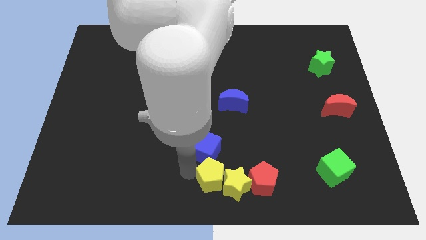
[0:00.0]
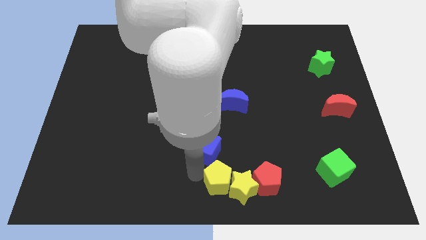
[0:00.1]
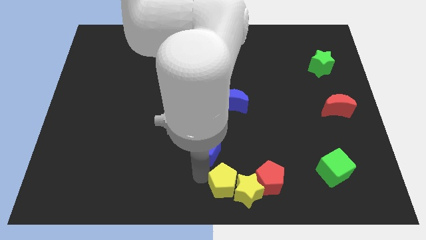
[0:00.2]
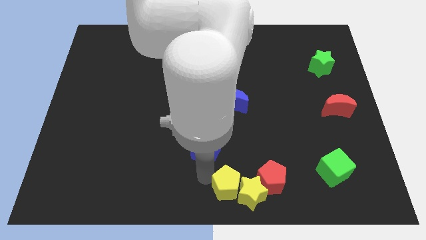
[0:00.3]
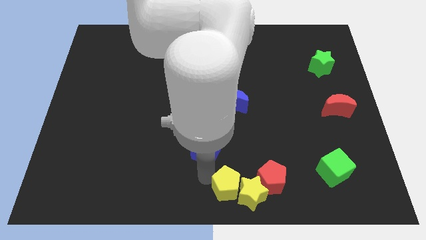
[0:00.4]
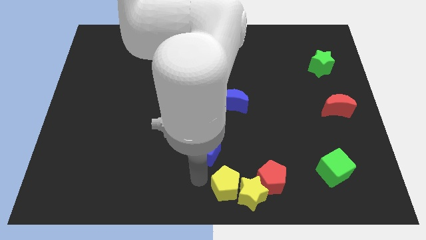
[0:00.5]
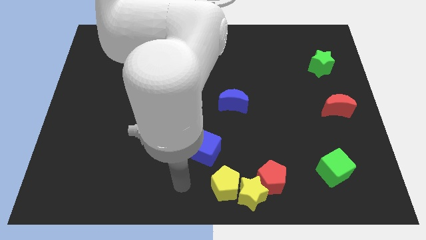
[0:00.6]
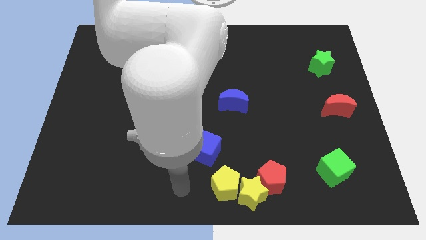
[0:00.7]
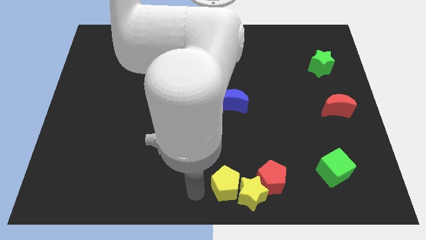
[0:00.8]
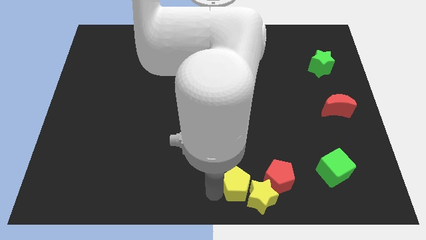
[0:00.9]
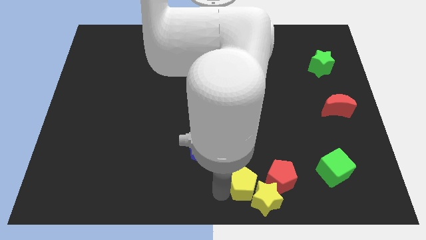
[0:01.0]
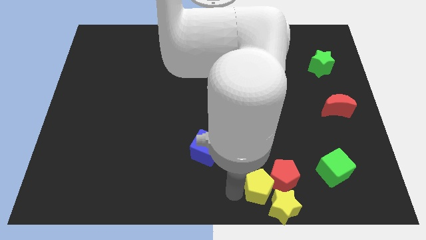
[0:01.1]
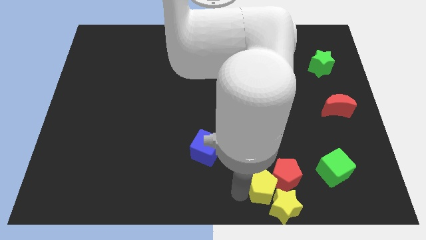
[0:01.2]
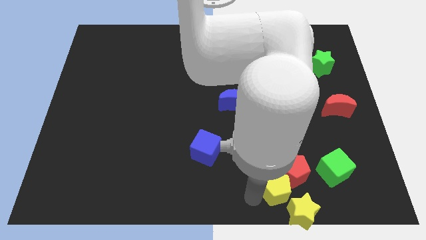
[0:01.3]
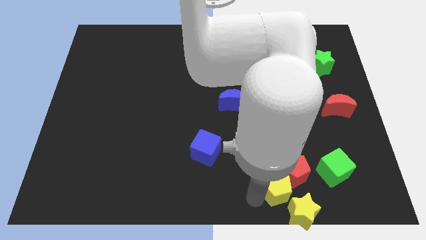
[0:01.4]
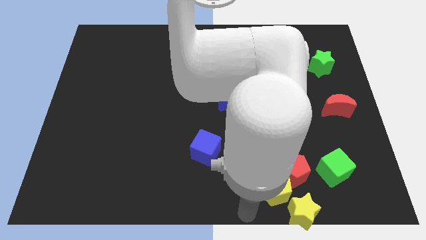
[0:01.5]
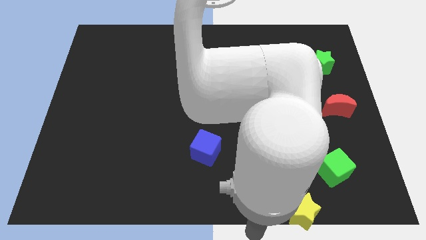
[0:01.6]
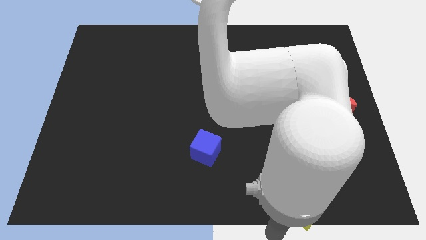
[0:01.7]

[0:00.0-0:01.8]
move the yellow pentagon left to the red pentagon

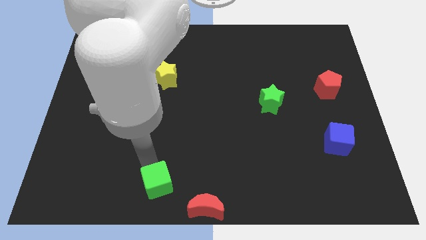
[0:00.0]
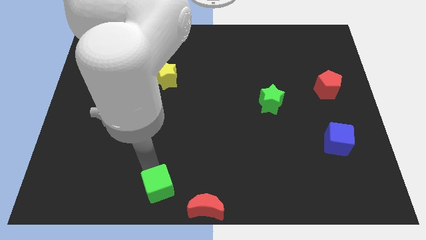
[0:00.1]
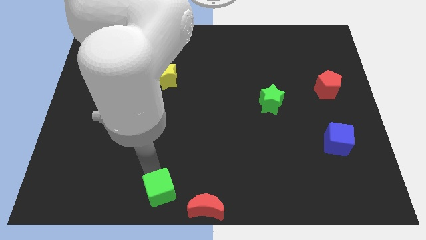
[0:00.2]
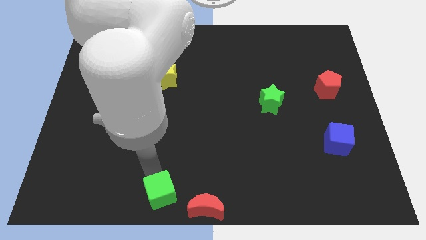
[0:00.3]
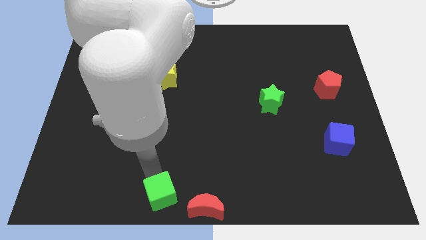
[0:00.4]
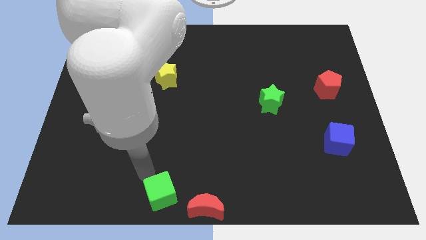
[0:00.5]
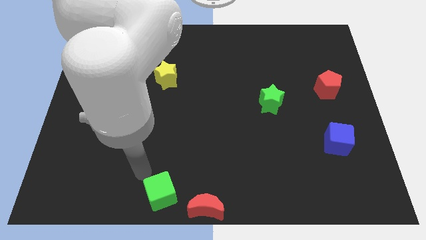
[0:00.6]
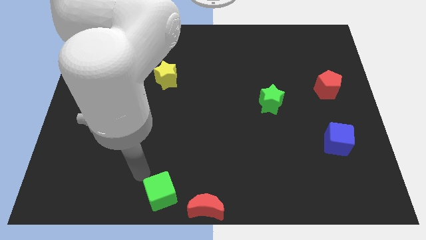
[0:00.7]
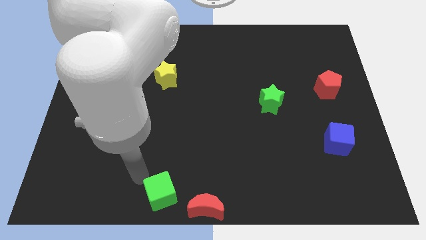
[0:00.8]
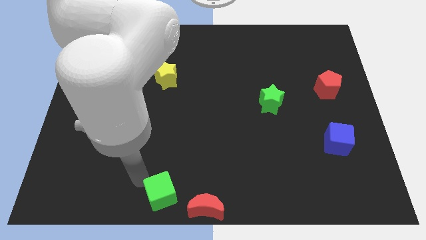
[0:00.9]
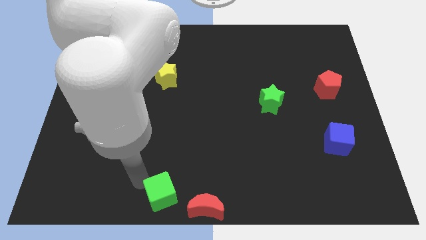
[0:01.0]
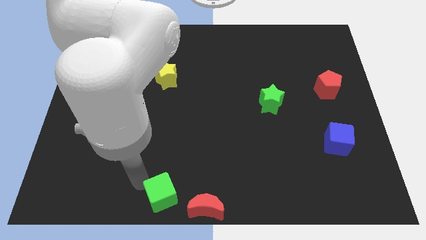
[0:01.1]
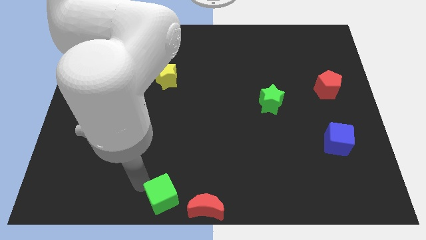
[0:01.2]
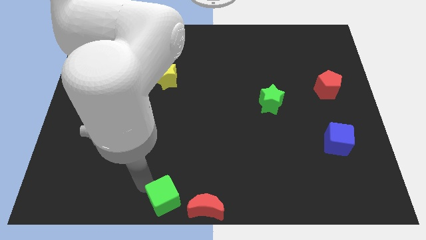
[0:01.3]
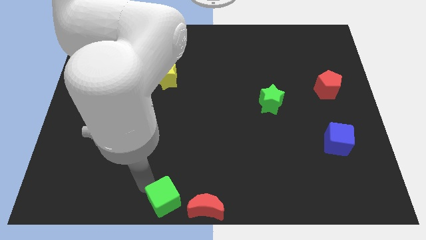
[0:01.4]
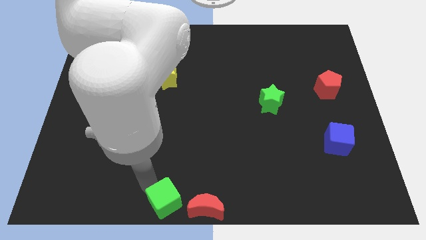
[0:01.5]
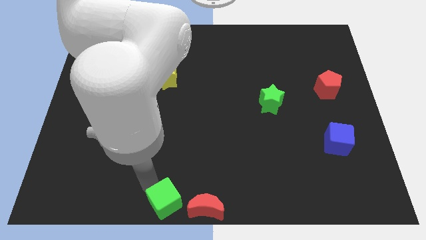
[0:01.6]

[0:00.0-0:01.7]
place the green cube left to the red crescent

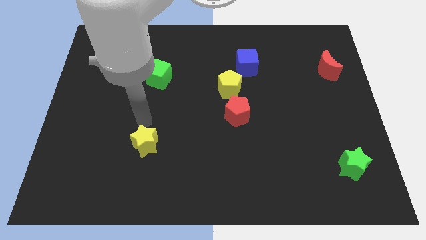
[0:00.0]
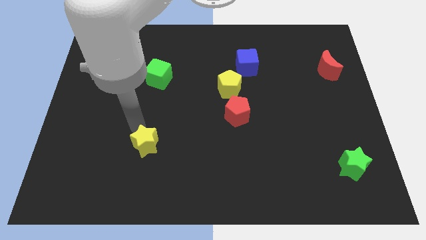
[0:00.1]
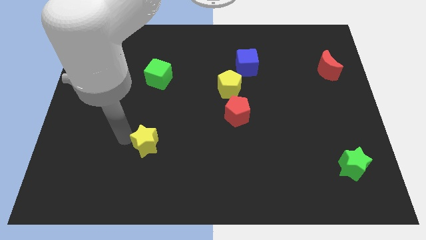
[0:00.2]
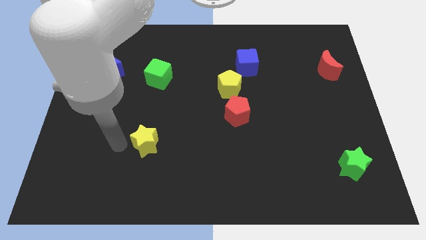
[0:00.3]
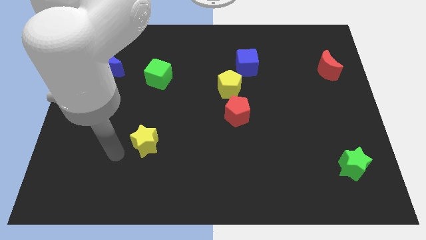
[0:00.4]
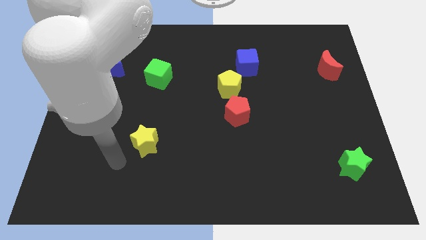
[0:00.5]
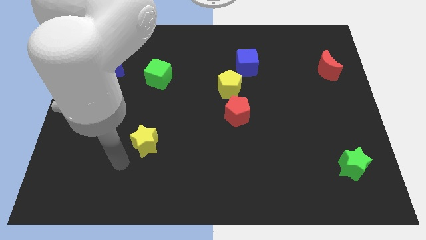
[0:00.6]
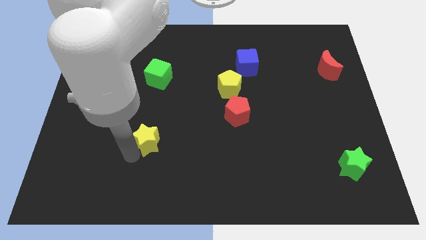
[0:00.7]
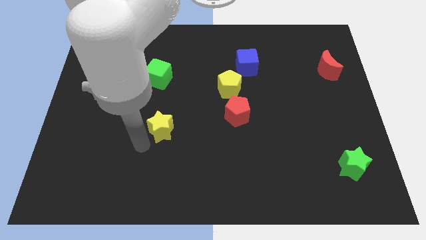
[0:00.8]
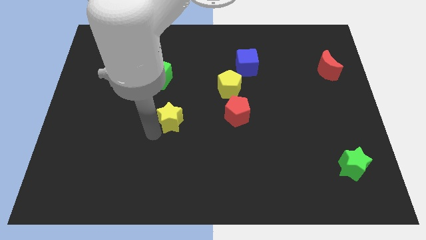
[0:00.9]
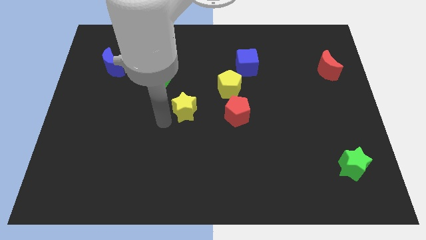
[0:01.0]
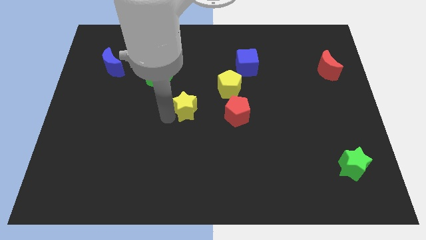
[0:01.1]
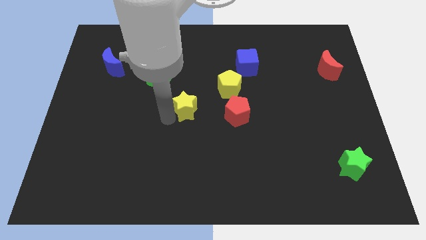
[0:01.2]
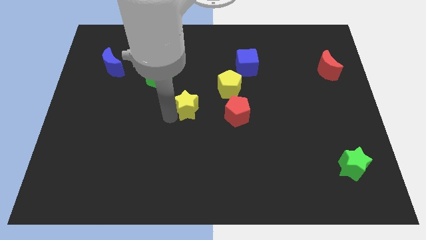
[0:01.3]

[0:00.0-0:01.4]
move the yellow star to the bottom right of the green cube

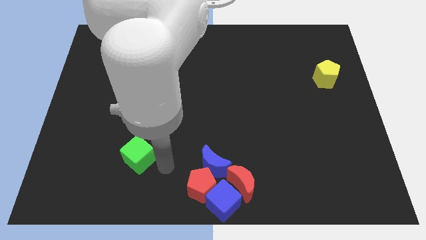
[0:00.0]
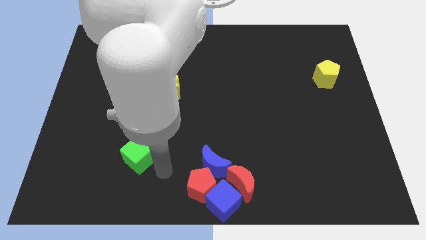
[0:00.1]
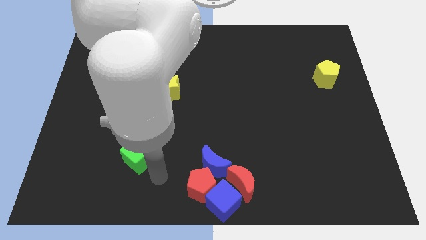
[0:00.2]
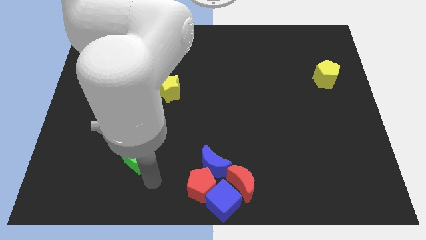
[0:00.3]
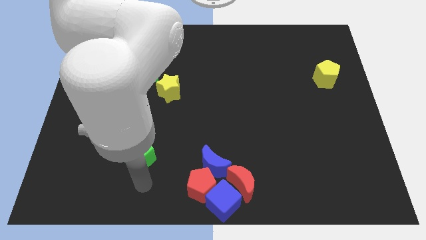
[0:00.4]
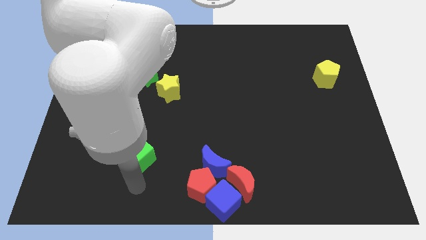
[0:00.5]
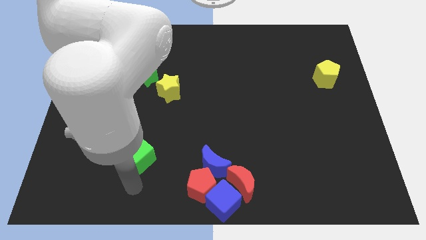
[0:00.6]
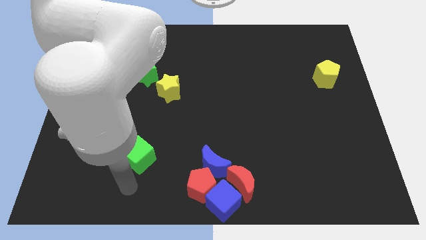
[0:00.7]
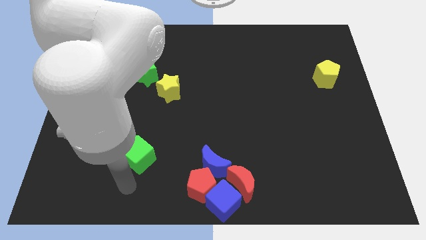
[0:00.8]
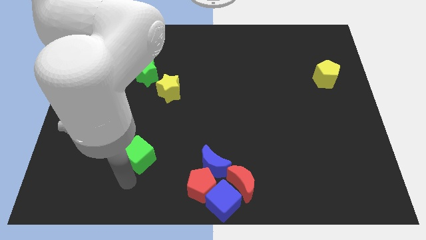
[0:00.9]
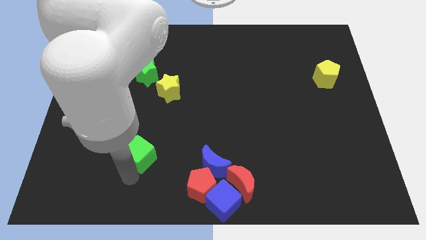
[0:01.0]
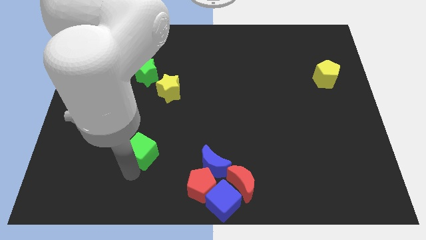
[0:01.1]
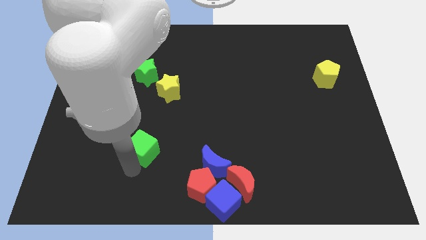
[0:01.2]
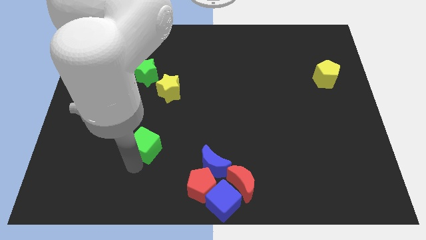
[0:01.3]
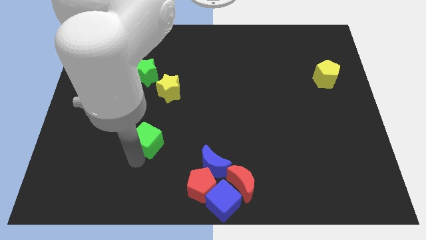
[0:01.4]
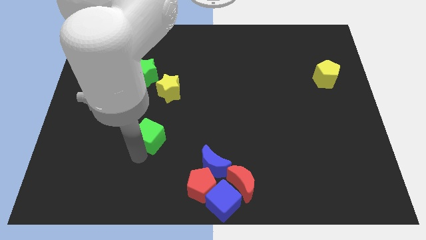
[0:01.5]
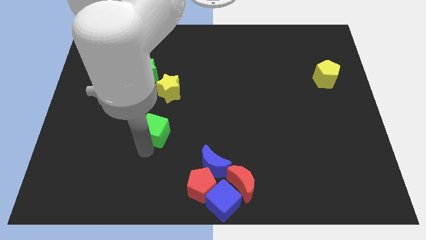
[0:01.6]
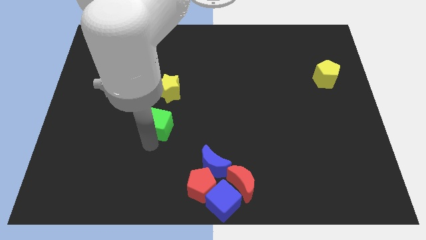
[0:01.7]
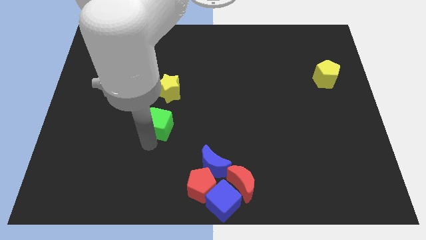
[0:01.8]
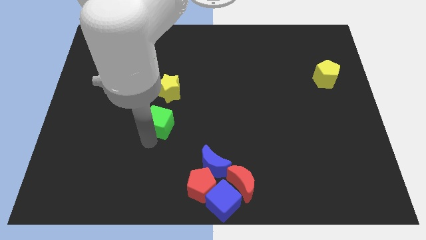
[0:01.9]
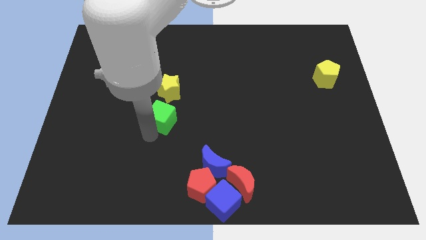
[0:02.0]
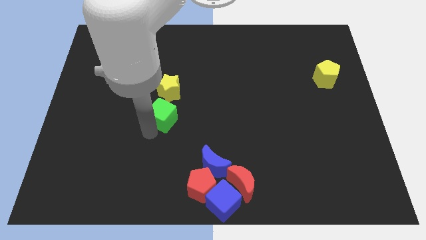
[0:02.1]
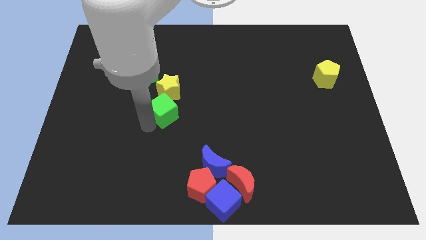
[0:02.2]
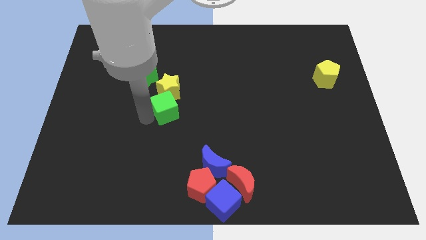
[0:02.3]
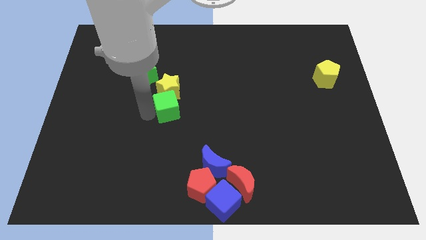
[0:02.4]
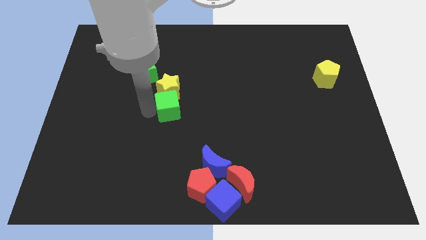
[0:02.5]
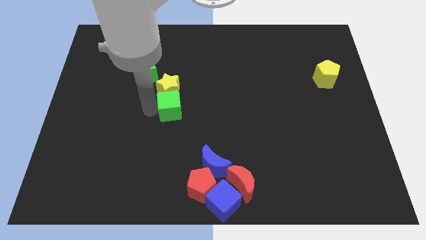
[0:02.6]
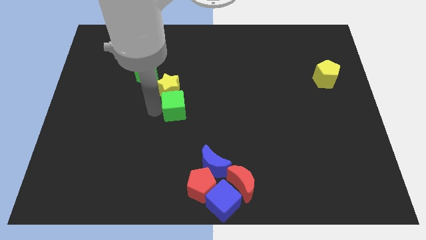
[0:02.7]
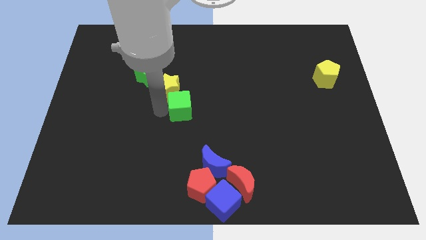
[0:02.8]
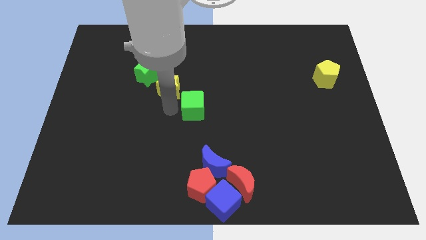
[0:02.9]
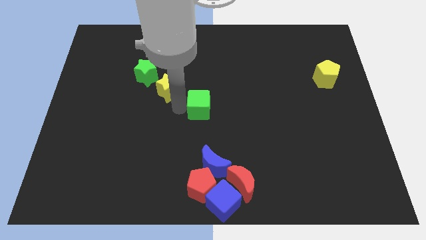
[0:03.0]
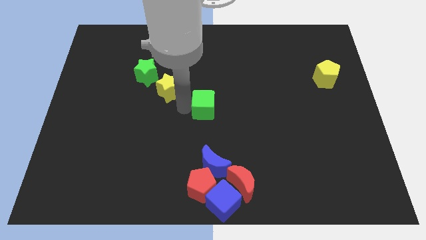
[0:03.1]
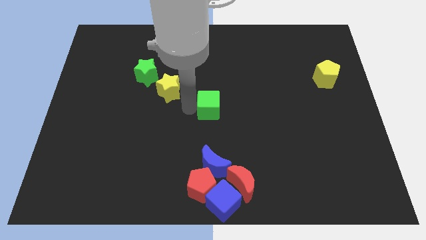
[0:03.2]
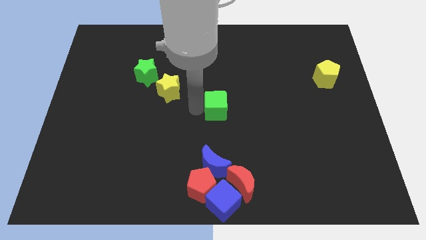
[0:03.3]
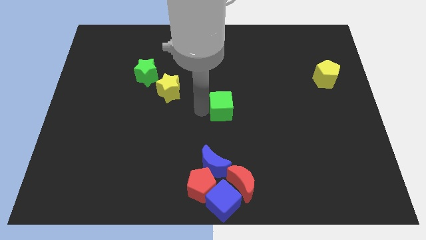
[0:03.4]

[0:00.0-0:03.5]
place the green cube at the center of the board

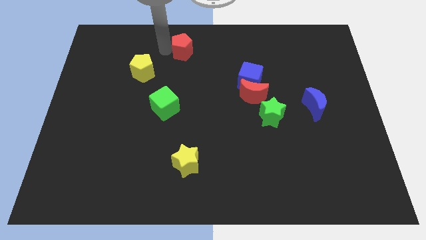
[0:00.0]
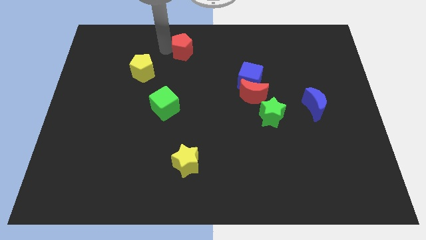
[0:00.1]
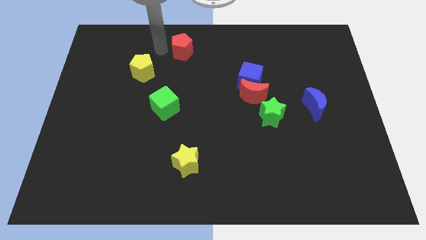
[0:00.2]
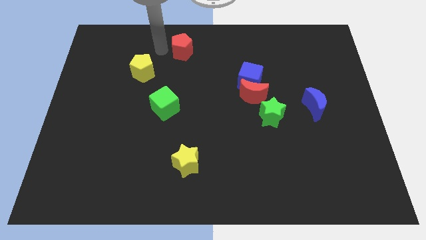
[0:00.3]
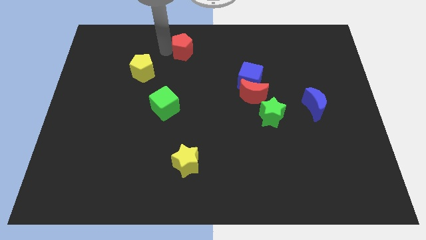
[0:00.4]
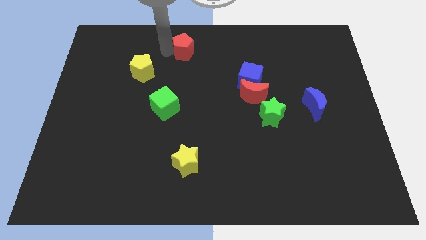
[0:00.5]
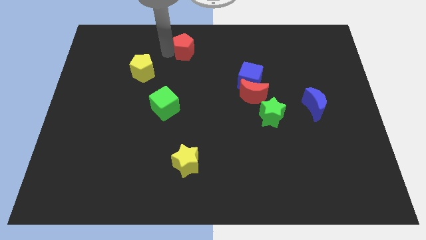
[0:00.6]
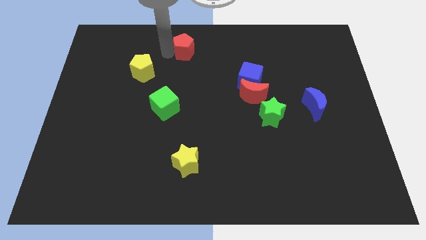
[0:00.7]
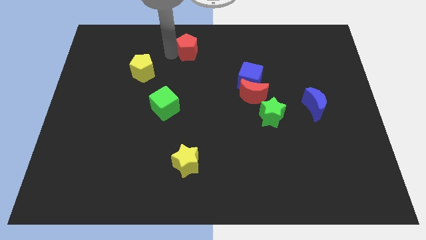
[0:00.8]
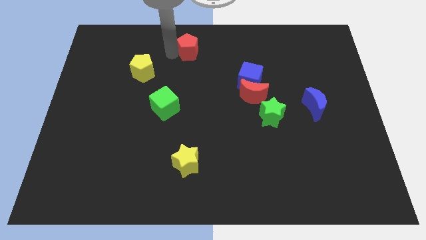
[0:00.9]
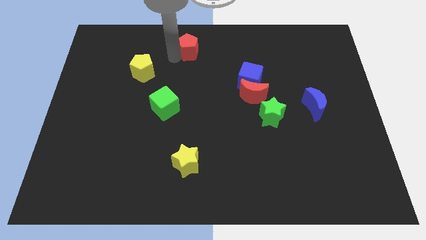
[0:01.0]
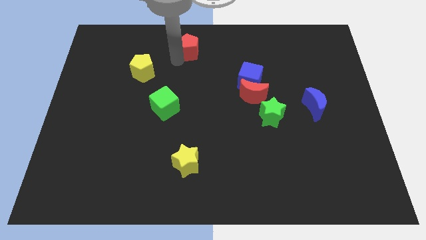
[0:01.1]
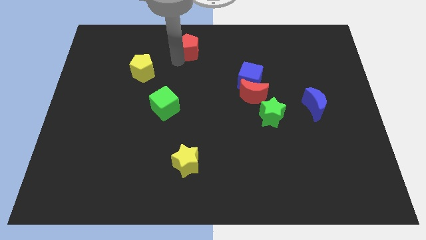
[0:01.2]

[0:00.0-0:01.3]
move red pentagon towards top center
